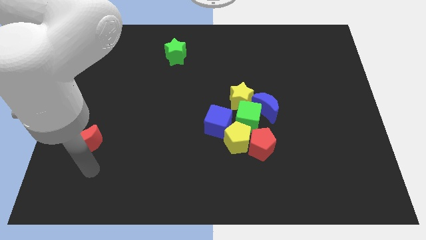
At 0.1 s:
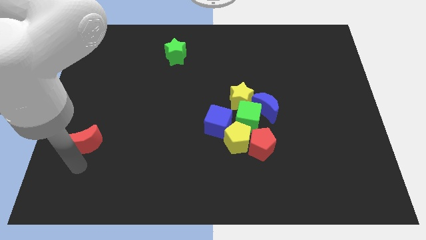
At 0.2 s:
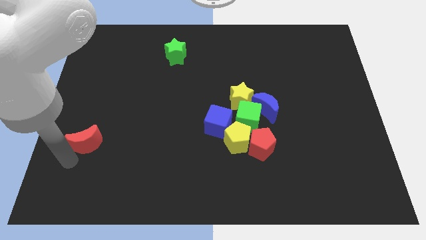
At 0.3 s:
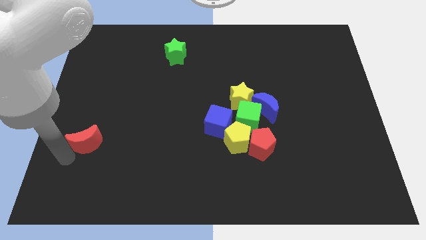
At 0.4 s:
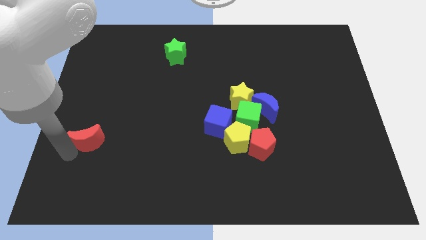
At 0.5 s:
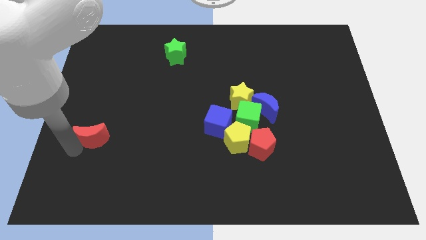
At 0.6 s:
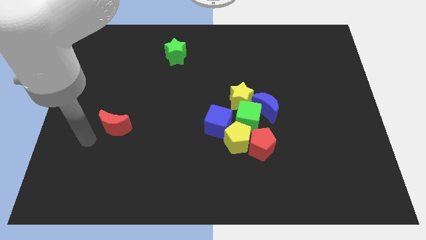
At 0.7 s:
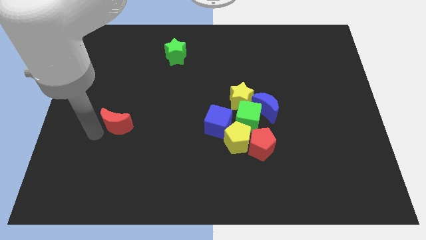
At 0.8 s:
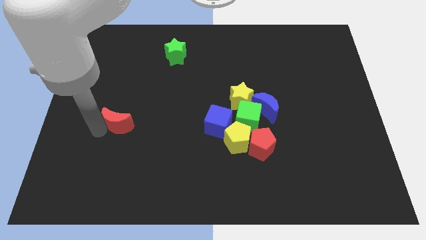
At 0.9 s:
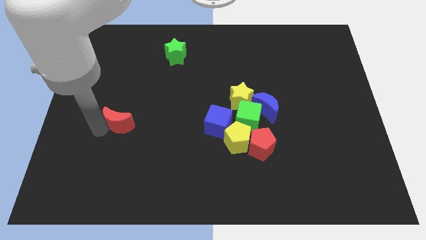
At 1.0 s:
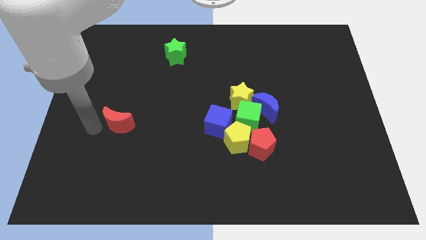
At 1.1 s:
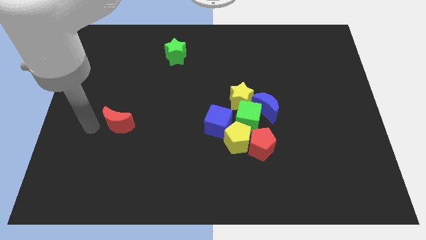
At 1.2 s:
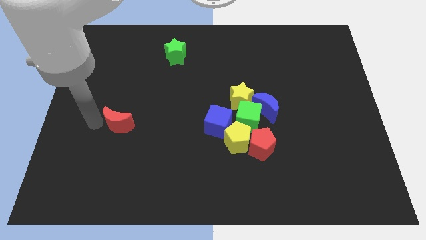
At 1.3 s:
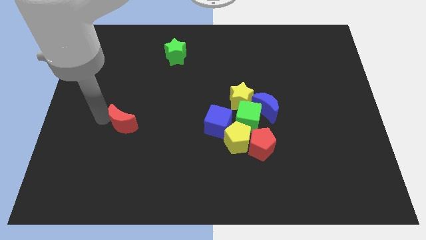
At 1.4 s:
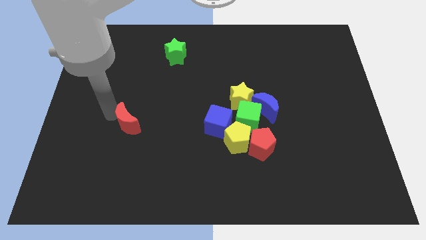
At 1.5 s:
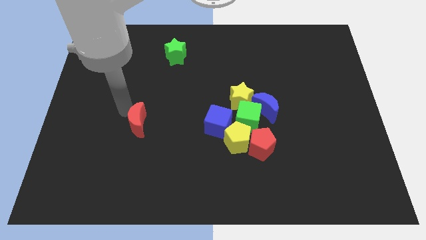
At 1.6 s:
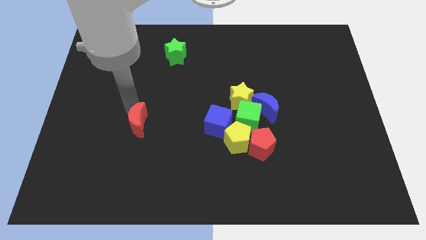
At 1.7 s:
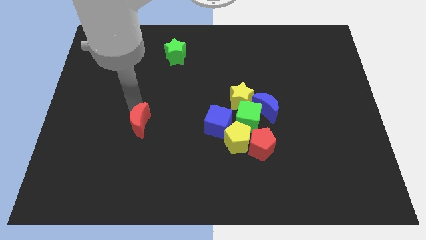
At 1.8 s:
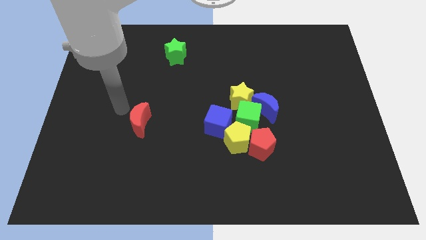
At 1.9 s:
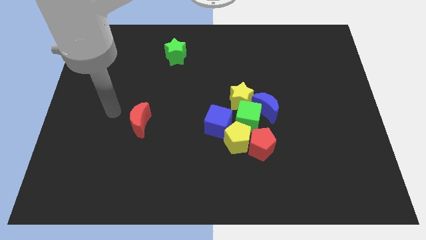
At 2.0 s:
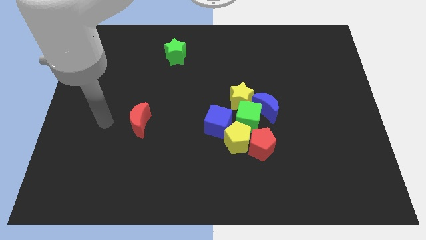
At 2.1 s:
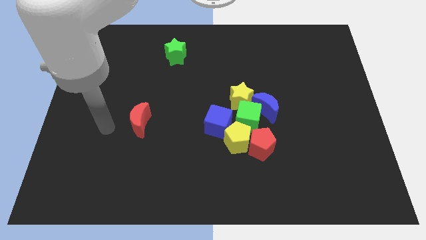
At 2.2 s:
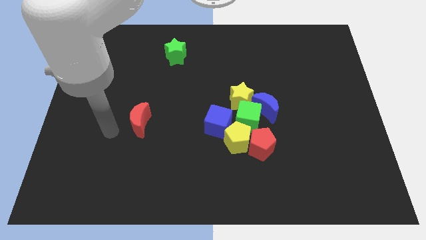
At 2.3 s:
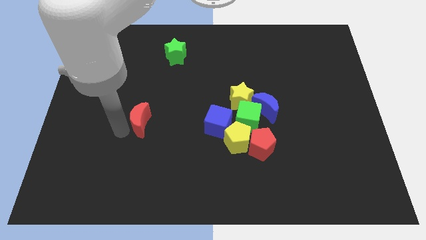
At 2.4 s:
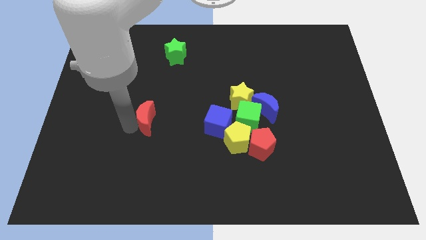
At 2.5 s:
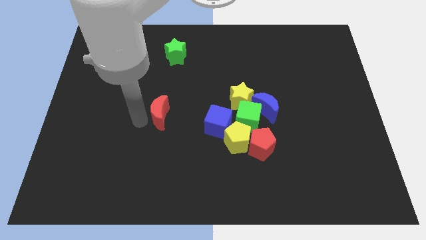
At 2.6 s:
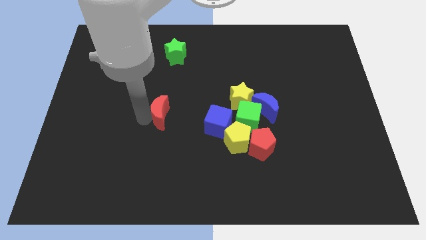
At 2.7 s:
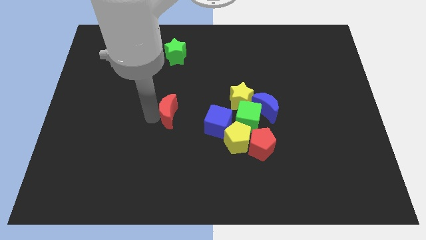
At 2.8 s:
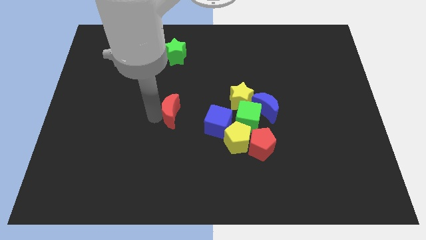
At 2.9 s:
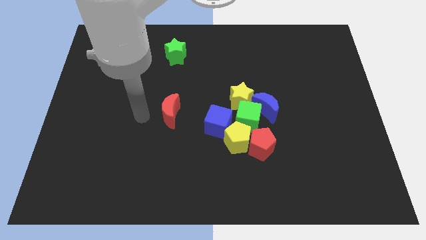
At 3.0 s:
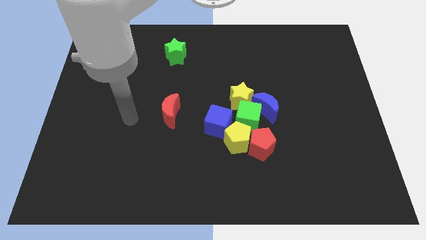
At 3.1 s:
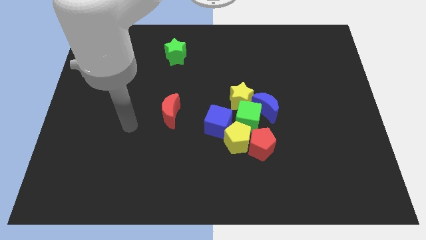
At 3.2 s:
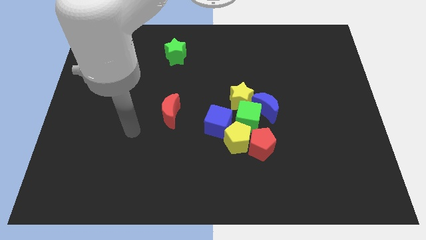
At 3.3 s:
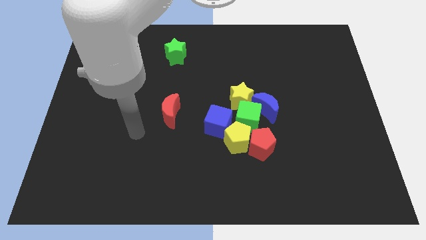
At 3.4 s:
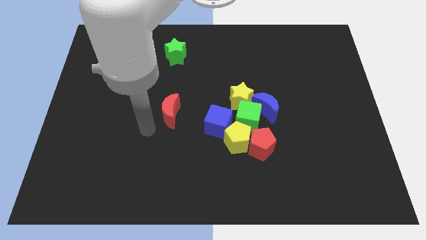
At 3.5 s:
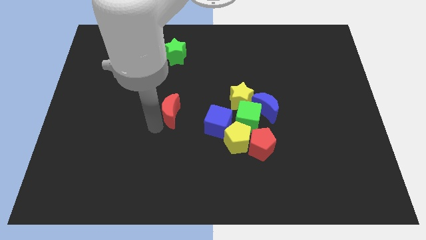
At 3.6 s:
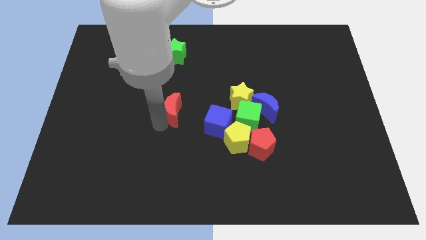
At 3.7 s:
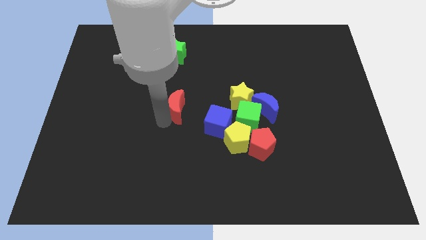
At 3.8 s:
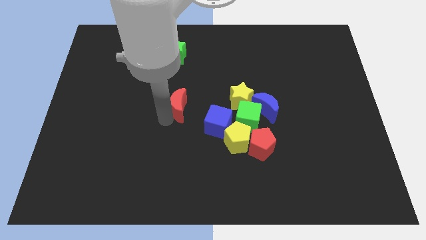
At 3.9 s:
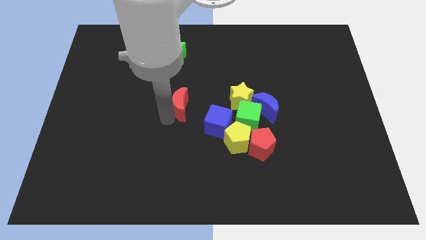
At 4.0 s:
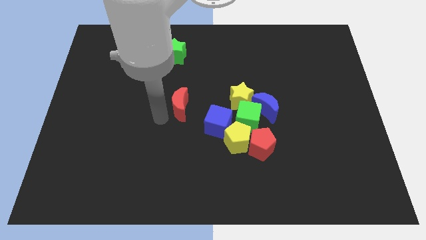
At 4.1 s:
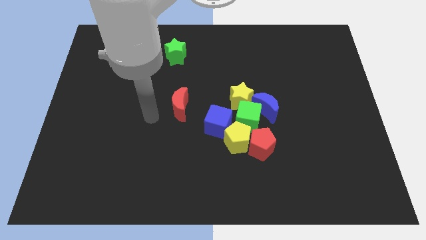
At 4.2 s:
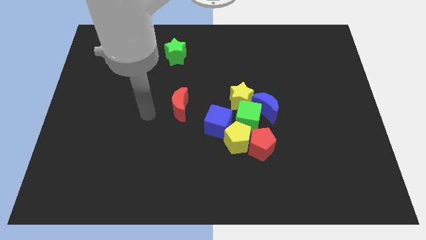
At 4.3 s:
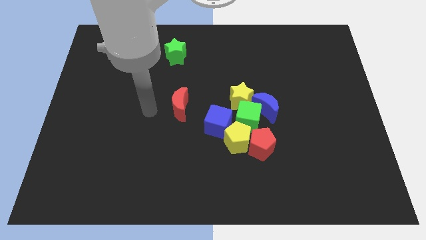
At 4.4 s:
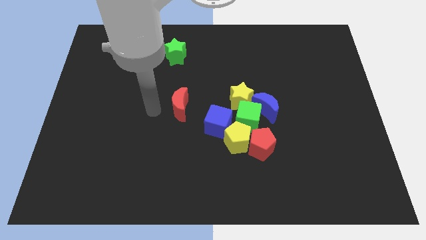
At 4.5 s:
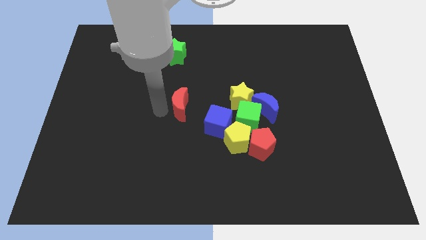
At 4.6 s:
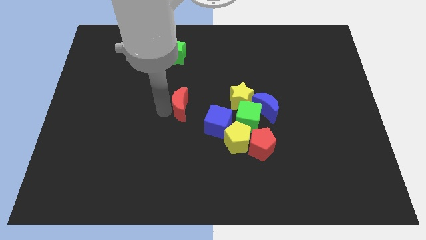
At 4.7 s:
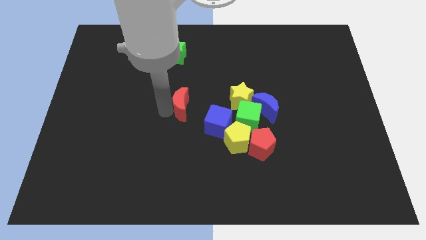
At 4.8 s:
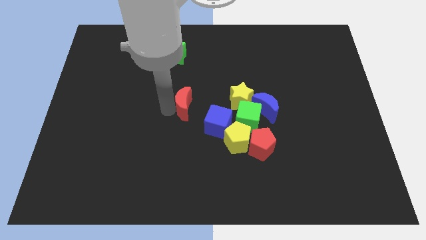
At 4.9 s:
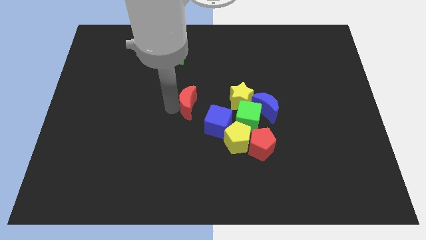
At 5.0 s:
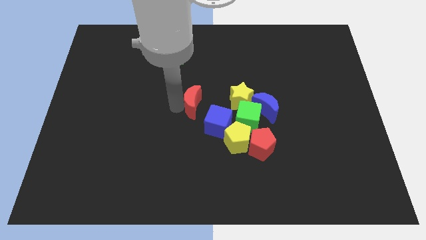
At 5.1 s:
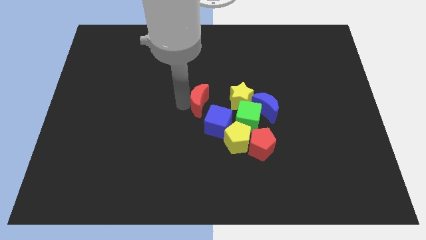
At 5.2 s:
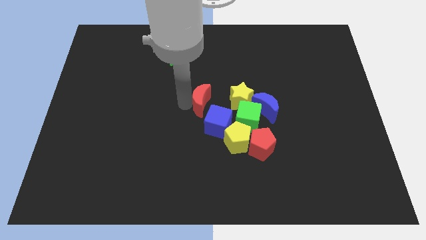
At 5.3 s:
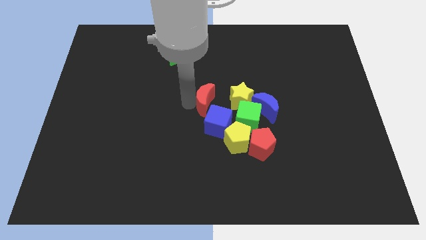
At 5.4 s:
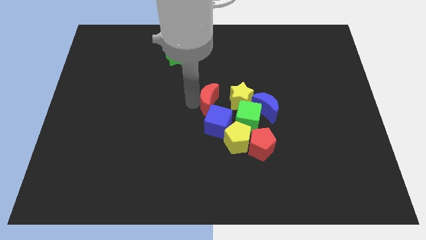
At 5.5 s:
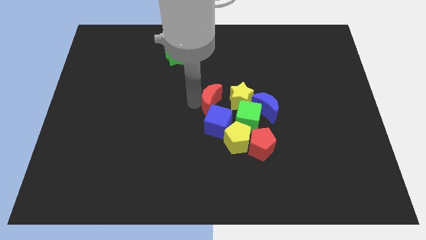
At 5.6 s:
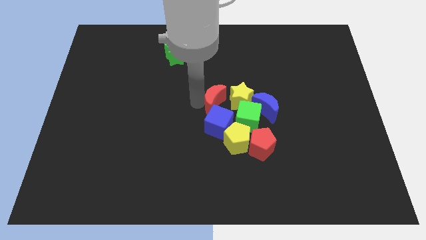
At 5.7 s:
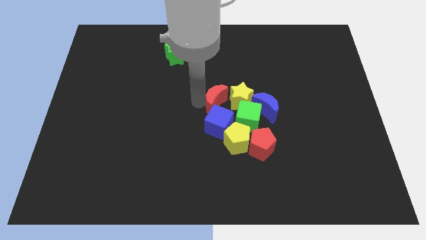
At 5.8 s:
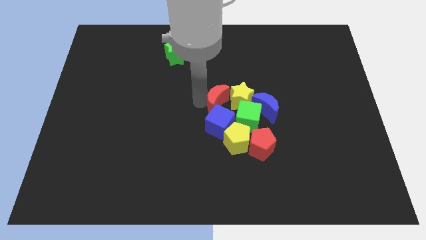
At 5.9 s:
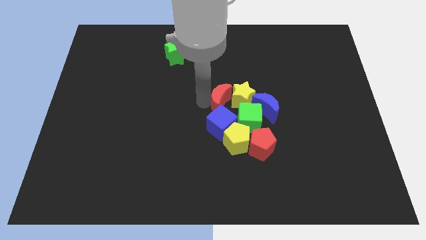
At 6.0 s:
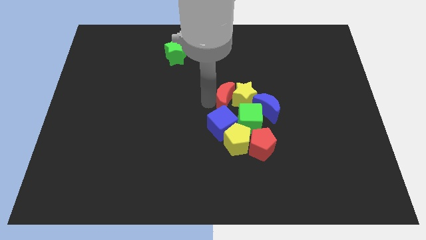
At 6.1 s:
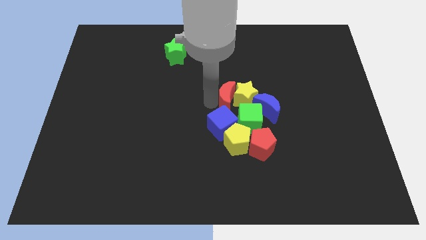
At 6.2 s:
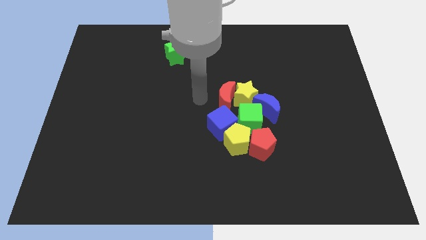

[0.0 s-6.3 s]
move the red moon into a group of blocks

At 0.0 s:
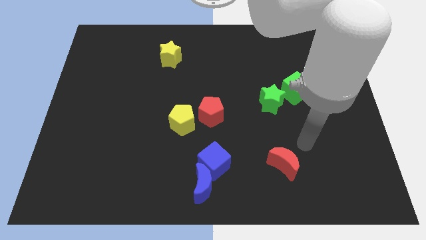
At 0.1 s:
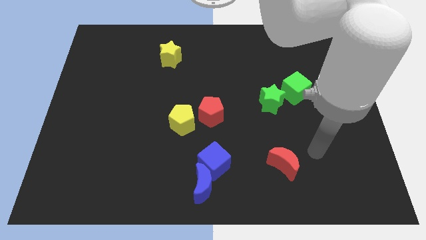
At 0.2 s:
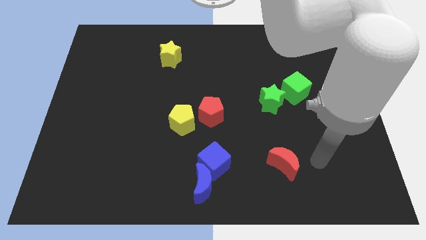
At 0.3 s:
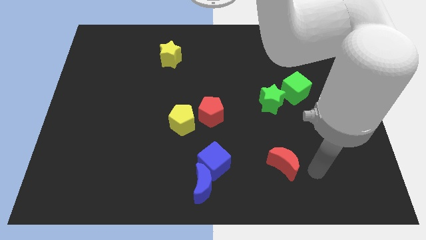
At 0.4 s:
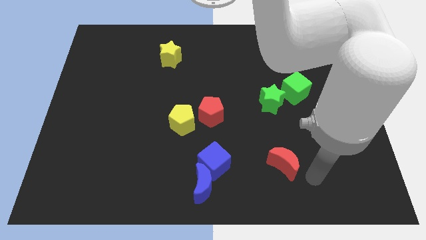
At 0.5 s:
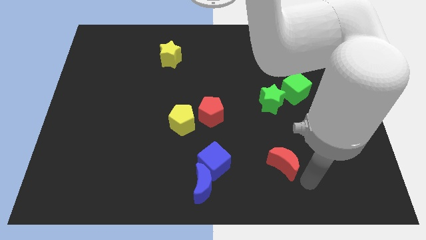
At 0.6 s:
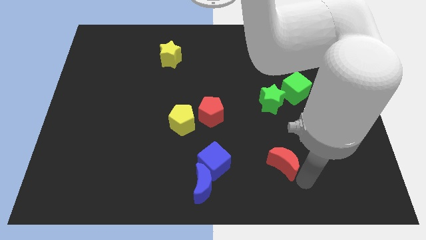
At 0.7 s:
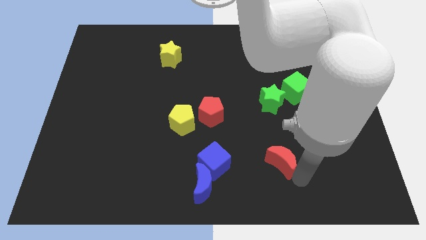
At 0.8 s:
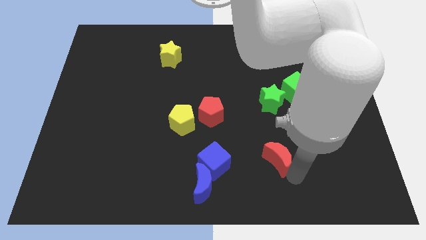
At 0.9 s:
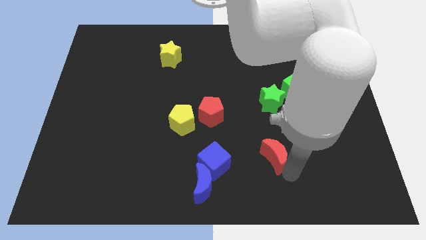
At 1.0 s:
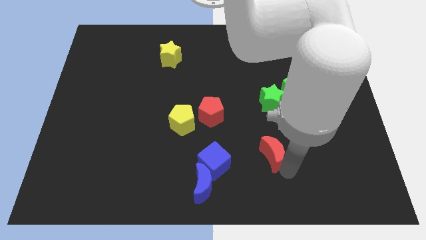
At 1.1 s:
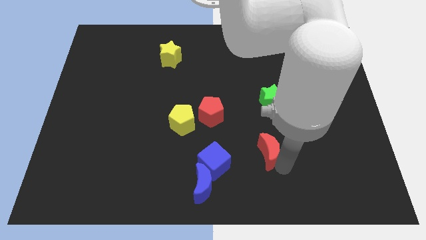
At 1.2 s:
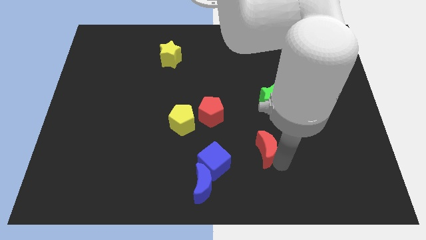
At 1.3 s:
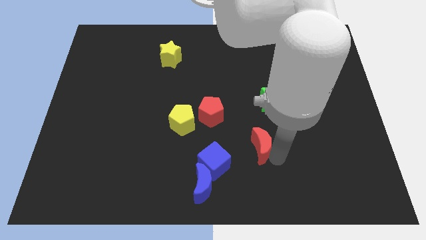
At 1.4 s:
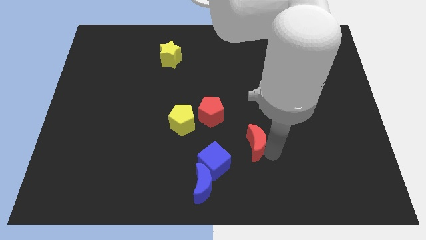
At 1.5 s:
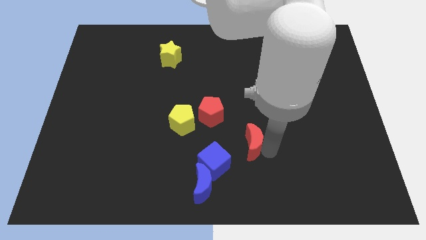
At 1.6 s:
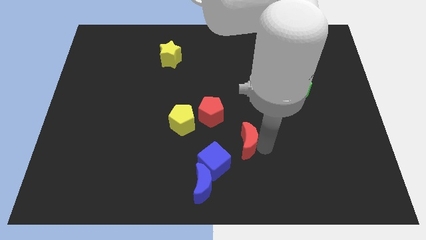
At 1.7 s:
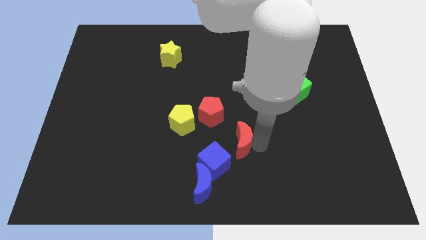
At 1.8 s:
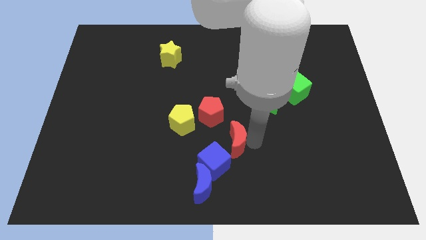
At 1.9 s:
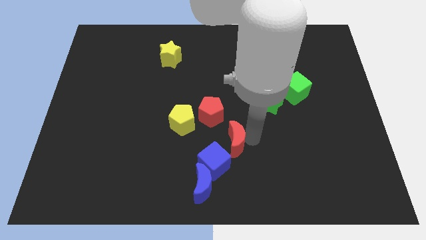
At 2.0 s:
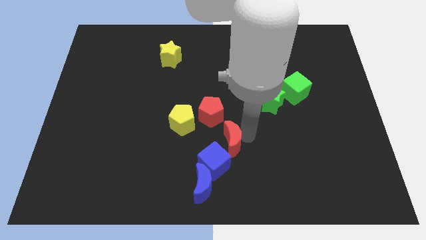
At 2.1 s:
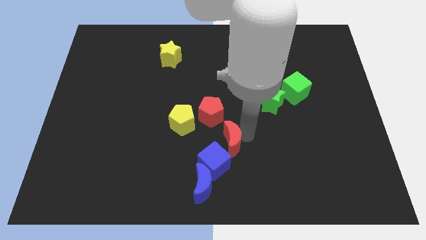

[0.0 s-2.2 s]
push the red moon above the blue cube

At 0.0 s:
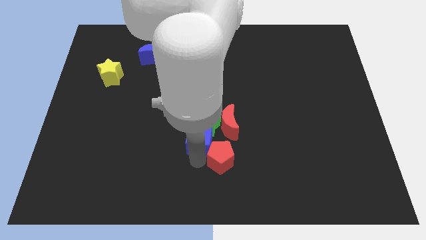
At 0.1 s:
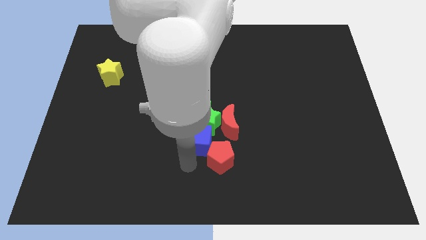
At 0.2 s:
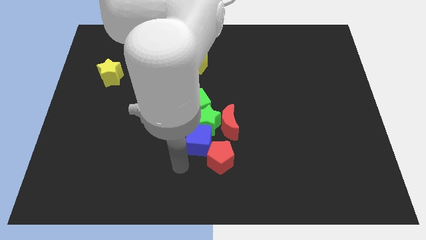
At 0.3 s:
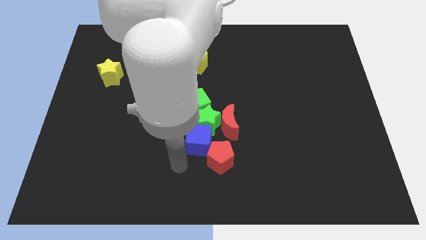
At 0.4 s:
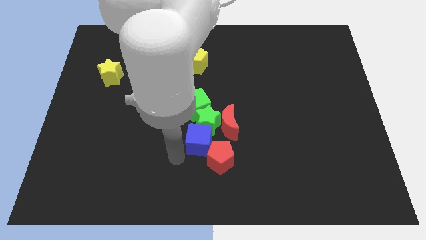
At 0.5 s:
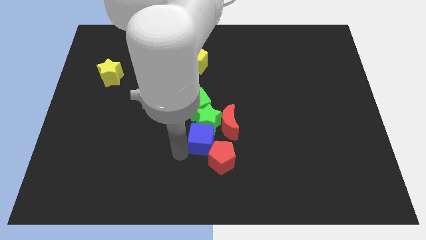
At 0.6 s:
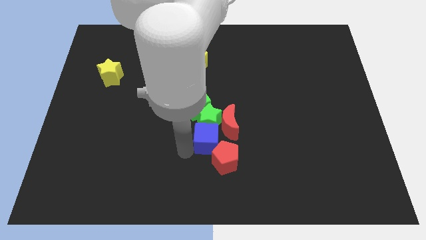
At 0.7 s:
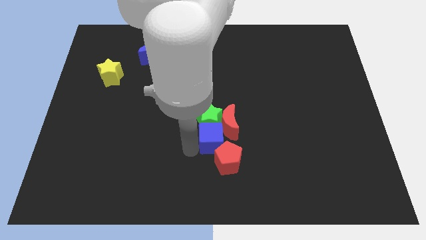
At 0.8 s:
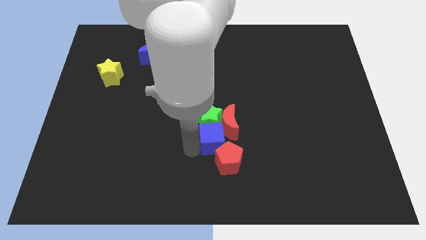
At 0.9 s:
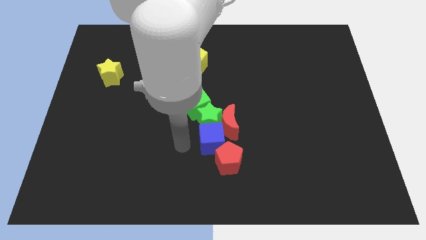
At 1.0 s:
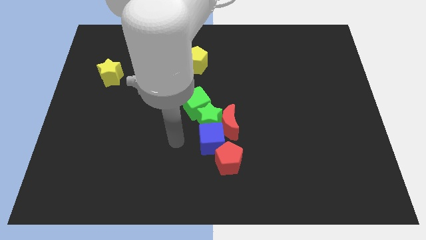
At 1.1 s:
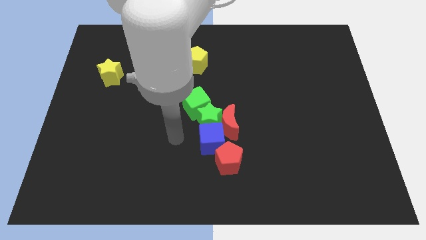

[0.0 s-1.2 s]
move blue cube slightly right
